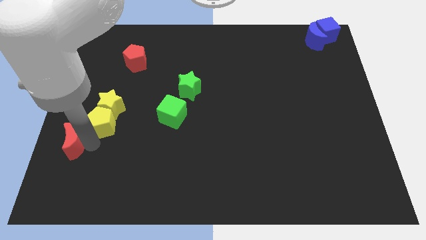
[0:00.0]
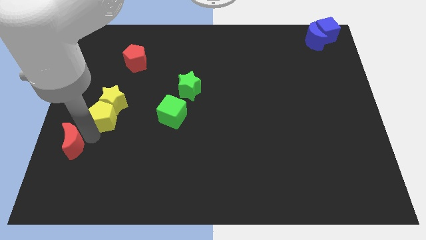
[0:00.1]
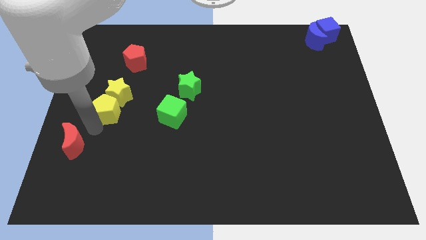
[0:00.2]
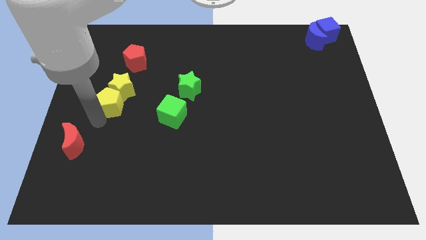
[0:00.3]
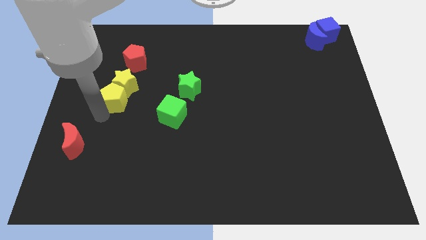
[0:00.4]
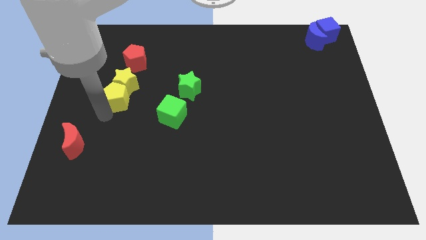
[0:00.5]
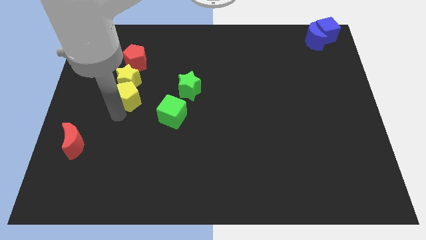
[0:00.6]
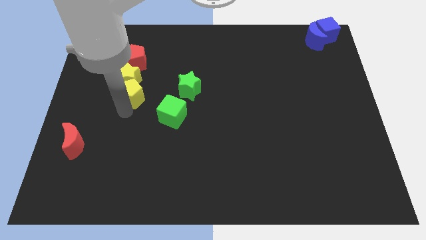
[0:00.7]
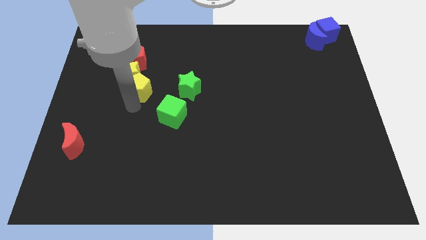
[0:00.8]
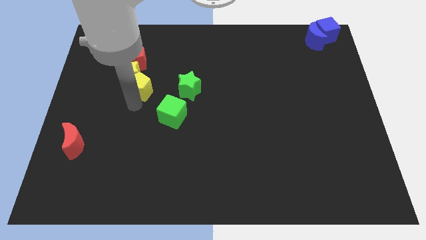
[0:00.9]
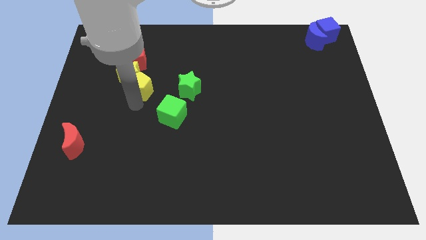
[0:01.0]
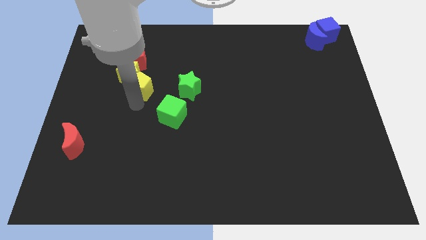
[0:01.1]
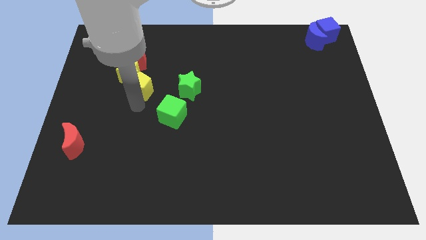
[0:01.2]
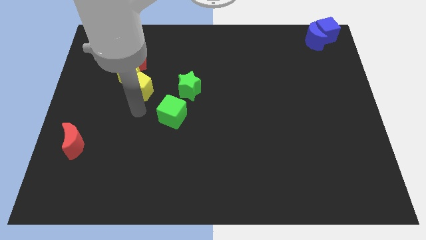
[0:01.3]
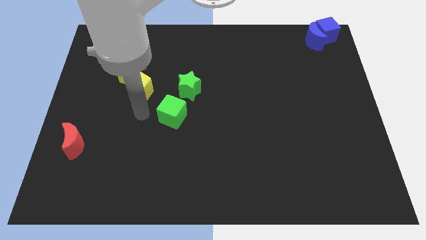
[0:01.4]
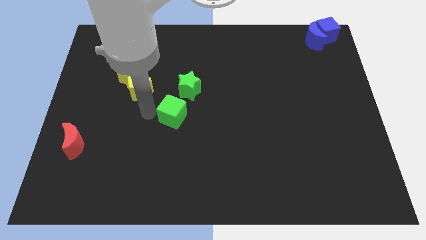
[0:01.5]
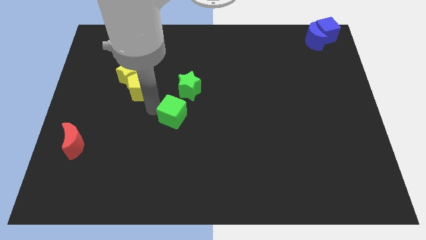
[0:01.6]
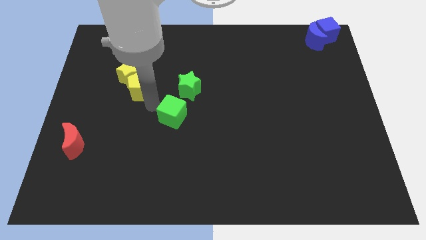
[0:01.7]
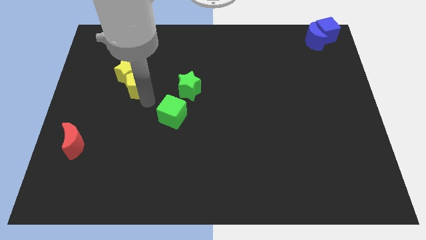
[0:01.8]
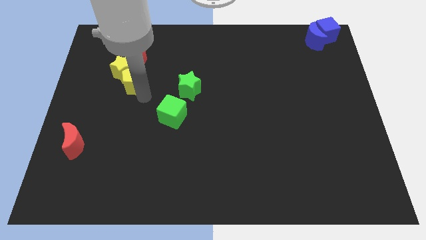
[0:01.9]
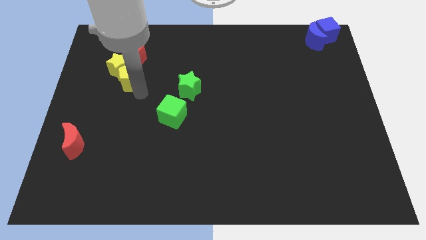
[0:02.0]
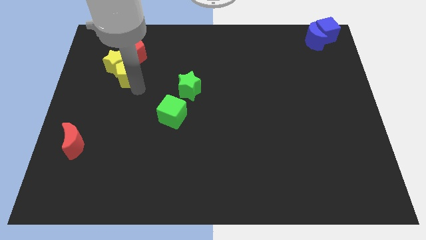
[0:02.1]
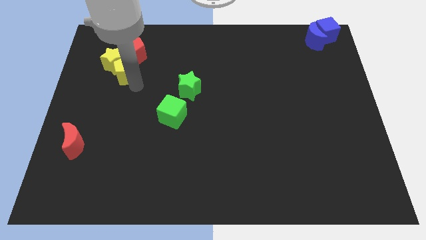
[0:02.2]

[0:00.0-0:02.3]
move the both yellow blocks to the bottom left side of the red pentagon

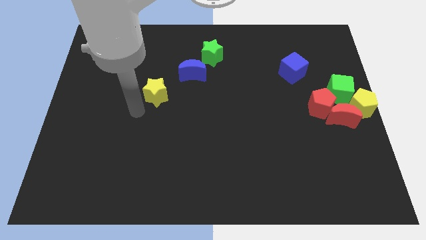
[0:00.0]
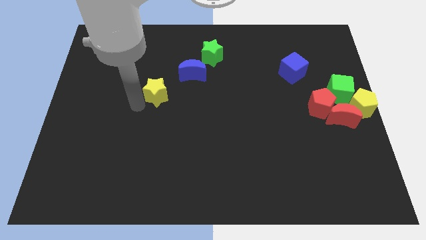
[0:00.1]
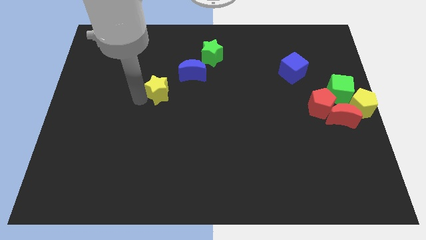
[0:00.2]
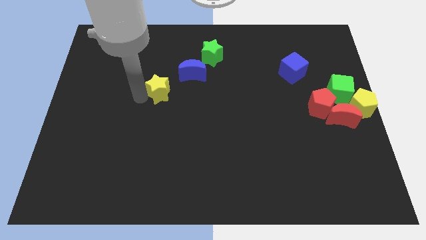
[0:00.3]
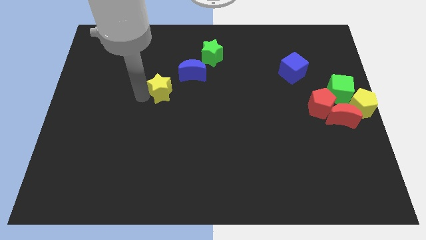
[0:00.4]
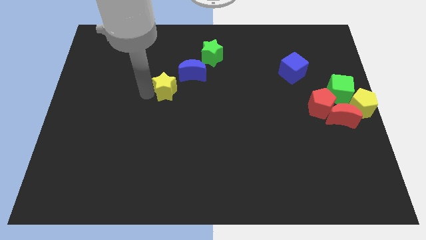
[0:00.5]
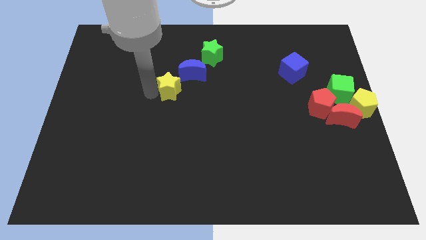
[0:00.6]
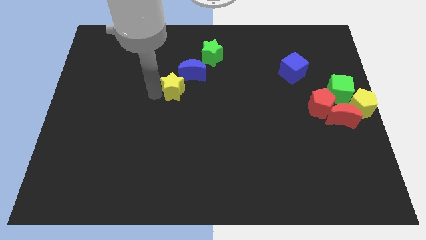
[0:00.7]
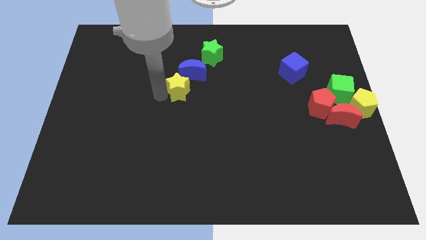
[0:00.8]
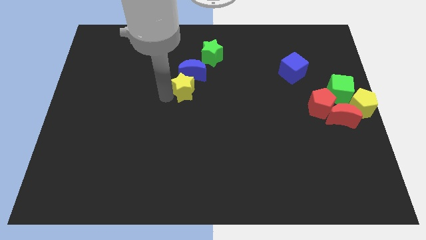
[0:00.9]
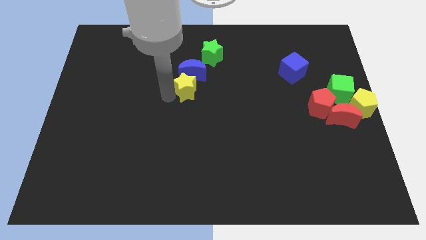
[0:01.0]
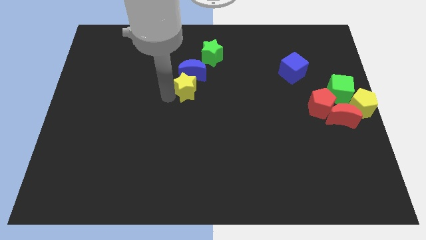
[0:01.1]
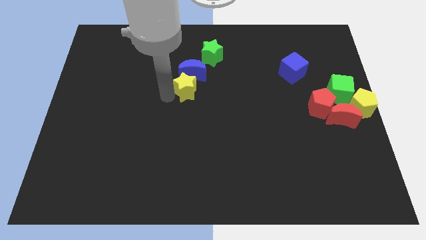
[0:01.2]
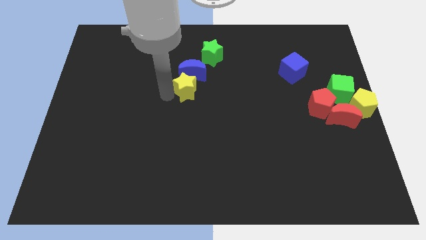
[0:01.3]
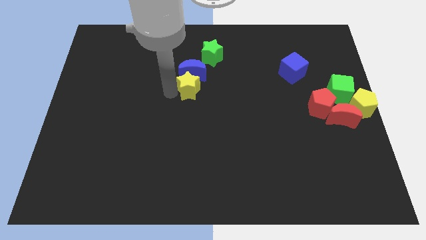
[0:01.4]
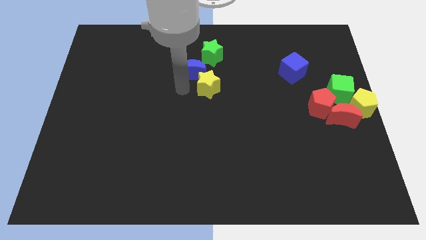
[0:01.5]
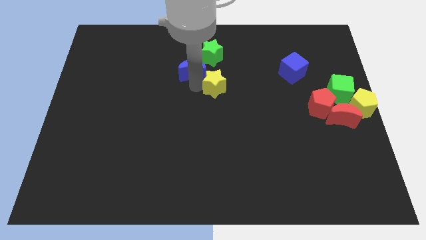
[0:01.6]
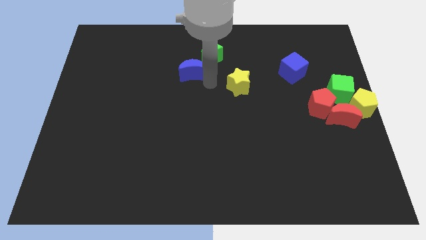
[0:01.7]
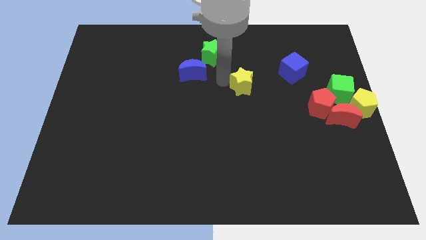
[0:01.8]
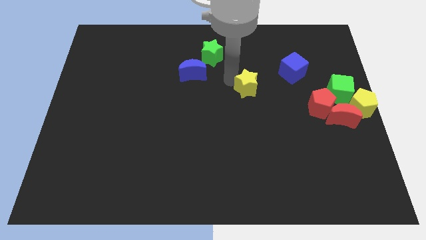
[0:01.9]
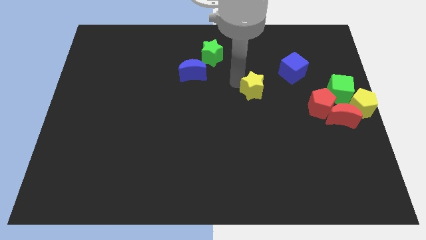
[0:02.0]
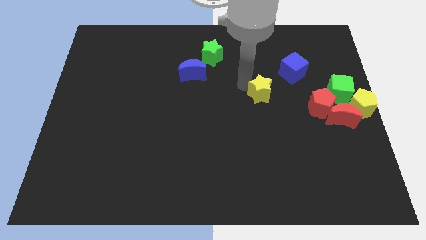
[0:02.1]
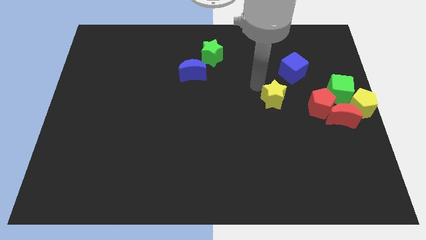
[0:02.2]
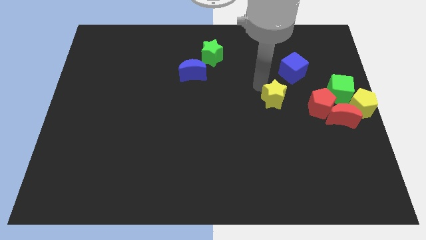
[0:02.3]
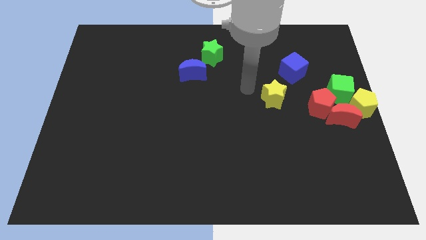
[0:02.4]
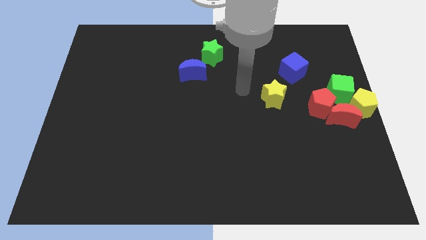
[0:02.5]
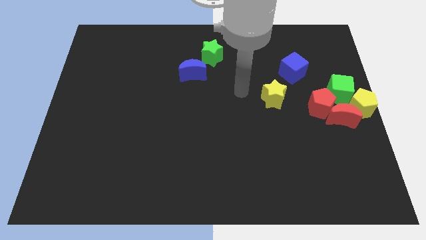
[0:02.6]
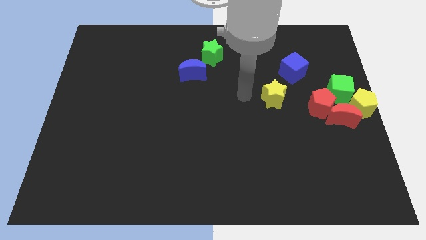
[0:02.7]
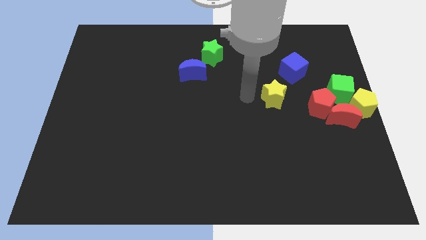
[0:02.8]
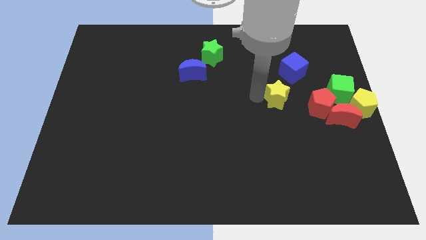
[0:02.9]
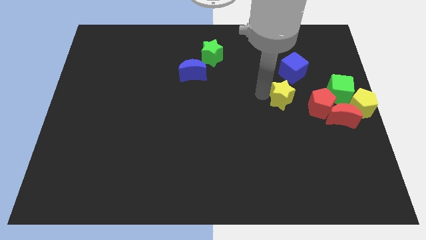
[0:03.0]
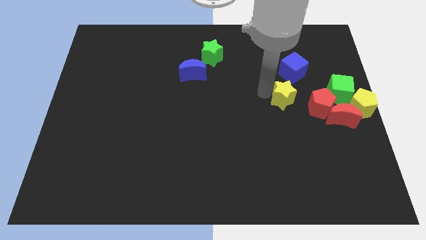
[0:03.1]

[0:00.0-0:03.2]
move the yellow star towards the right center of the board

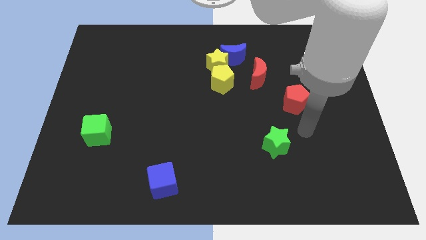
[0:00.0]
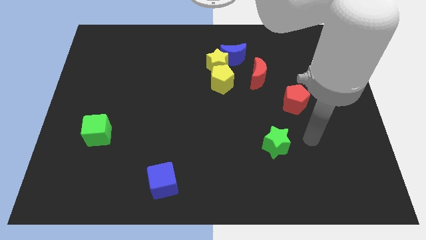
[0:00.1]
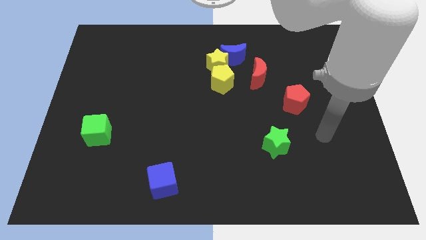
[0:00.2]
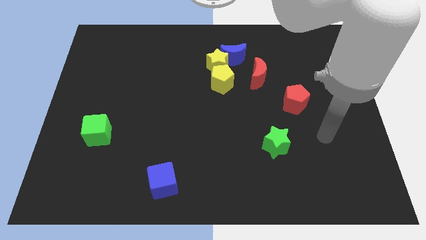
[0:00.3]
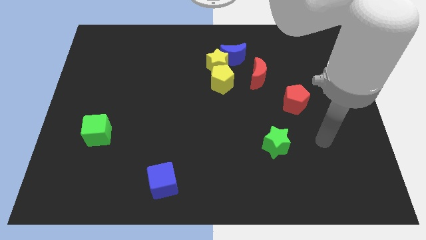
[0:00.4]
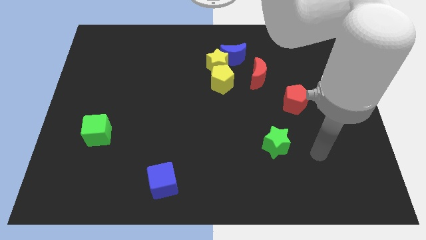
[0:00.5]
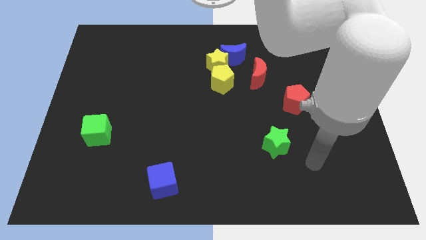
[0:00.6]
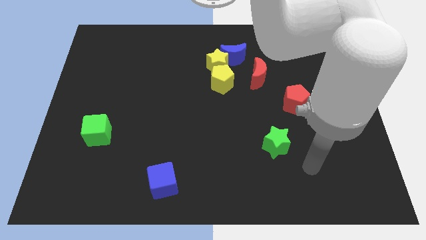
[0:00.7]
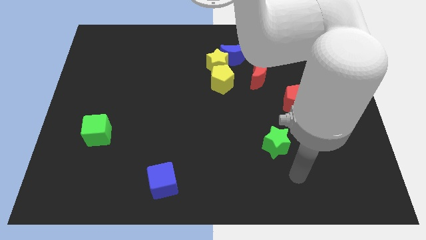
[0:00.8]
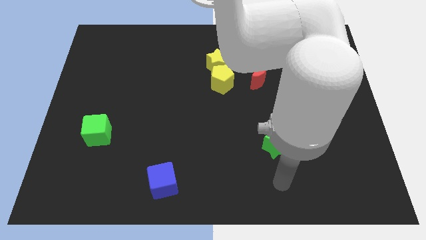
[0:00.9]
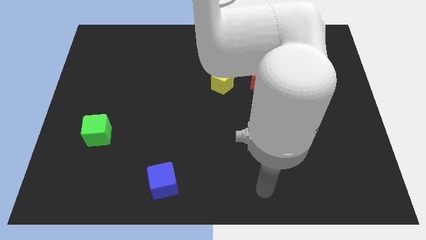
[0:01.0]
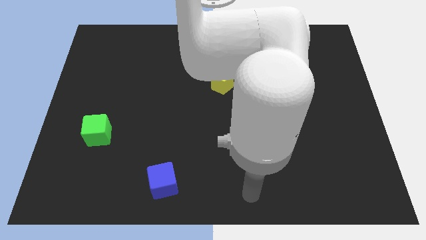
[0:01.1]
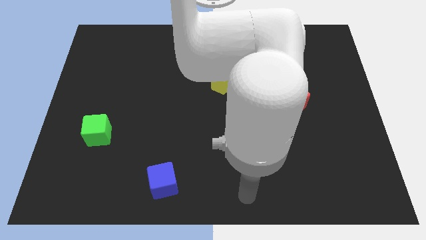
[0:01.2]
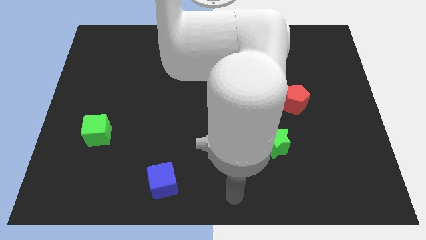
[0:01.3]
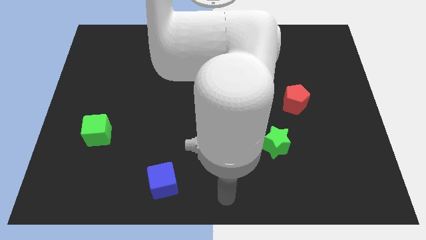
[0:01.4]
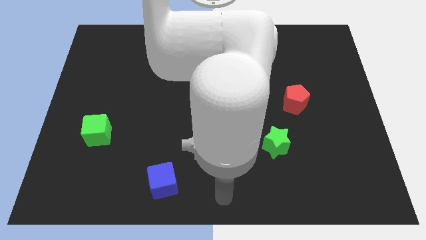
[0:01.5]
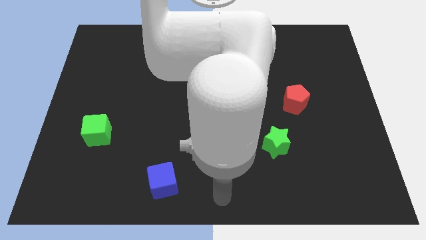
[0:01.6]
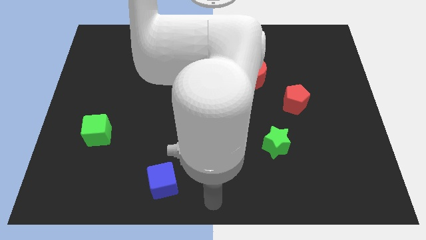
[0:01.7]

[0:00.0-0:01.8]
move yourself to the bottom center of the board

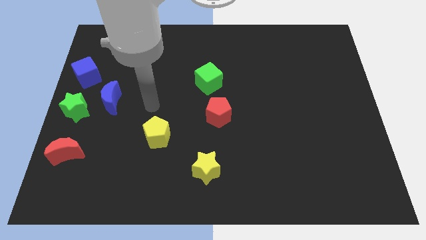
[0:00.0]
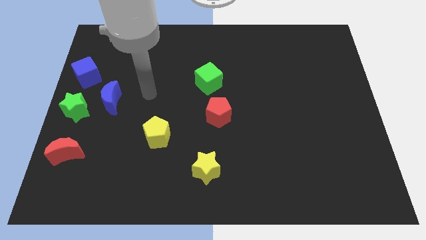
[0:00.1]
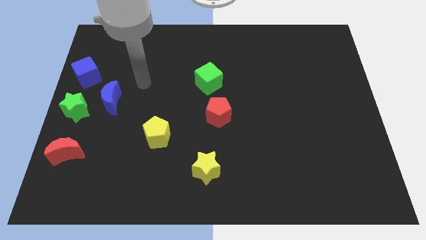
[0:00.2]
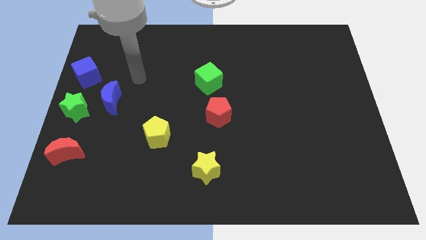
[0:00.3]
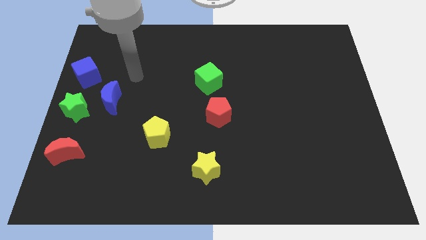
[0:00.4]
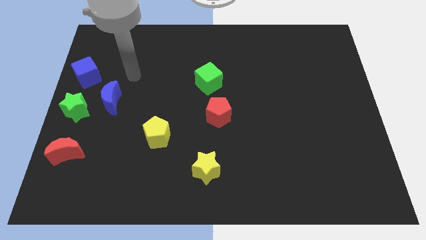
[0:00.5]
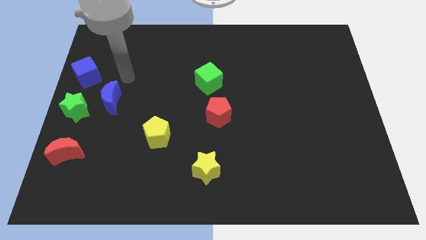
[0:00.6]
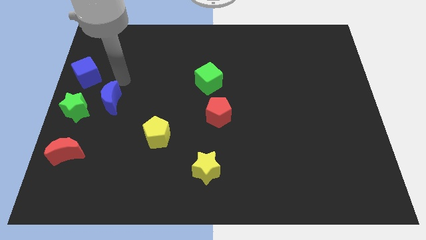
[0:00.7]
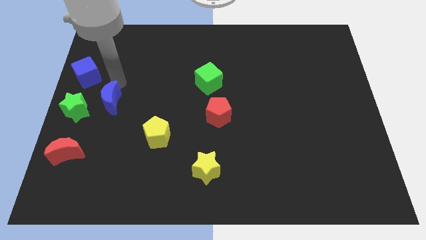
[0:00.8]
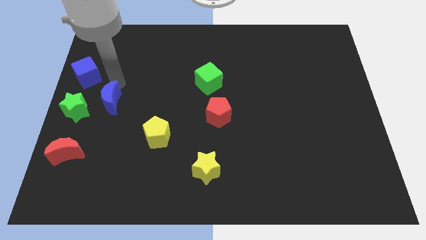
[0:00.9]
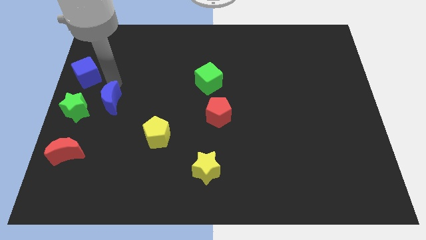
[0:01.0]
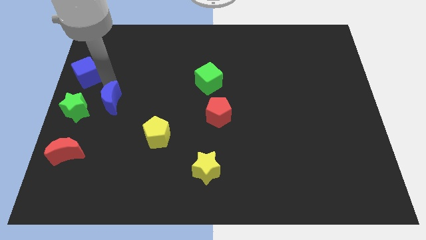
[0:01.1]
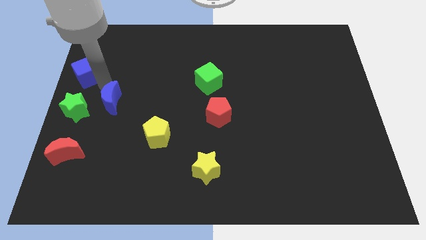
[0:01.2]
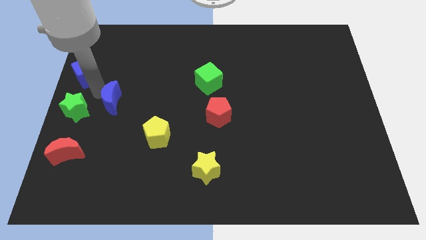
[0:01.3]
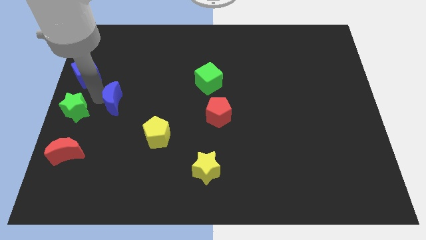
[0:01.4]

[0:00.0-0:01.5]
move the arm above the blue crescent

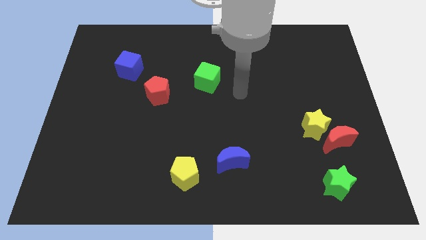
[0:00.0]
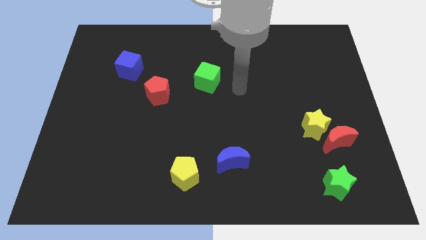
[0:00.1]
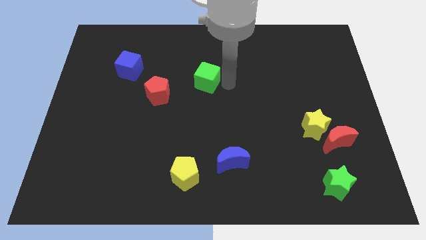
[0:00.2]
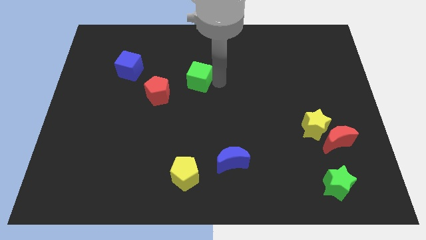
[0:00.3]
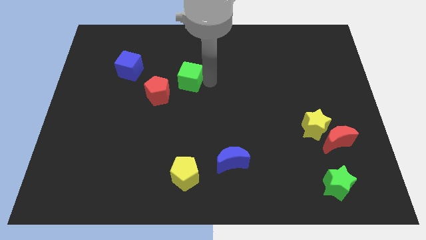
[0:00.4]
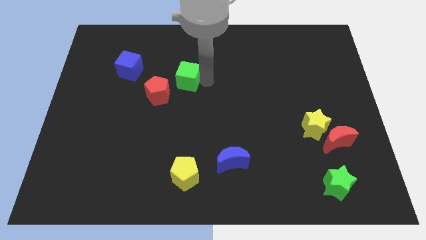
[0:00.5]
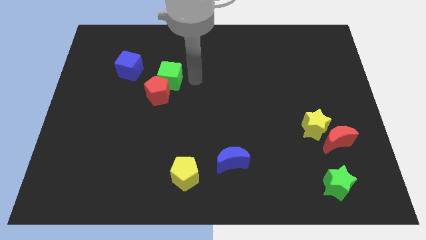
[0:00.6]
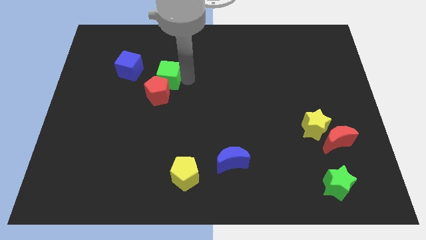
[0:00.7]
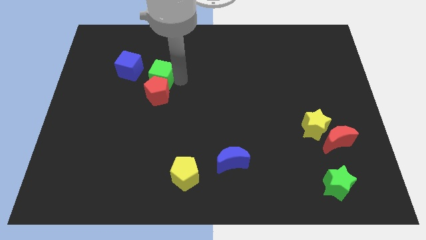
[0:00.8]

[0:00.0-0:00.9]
push the green cube above red pentagon
